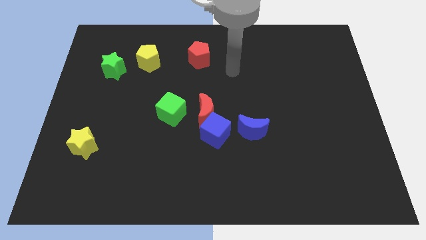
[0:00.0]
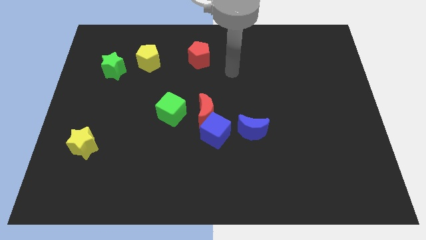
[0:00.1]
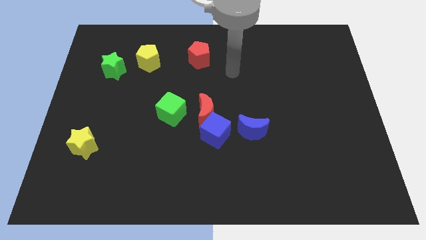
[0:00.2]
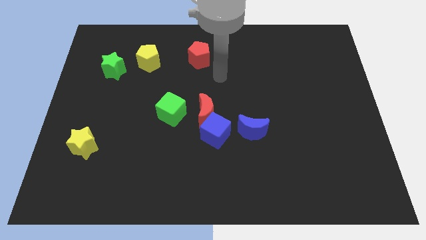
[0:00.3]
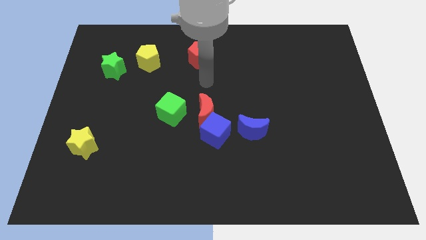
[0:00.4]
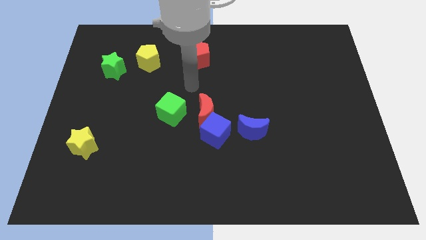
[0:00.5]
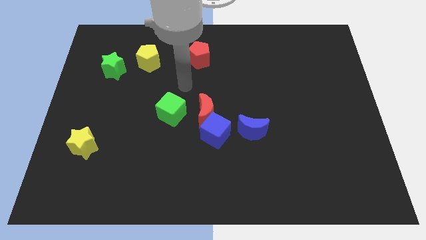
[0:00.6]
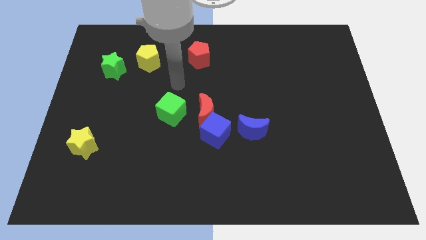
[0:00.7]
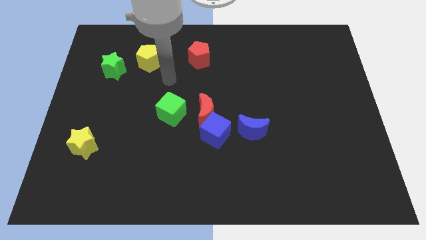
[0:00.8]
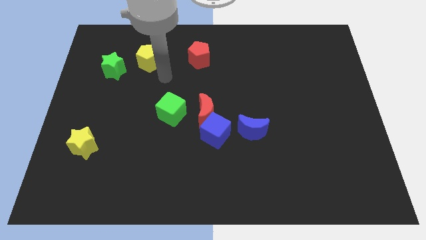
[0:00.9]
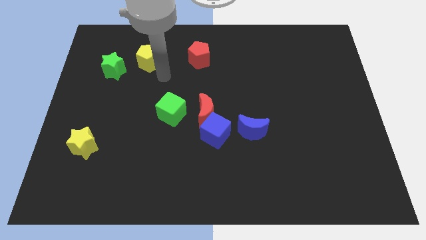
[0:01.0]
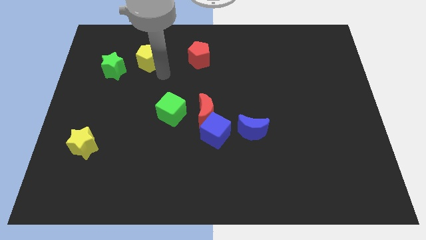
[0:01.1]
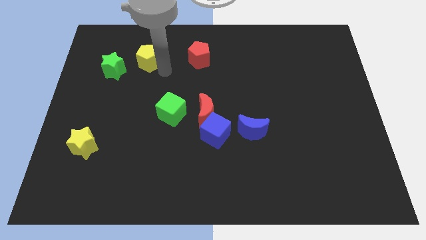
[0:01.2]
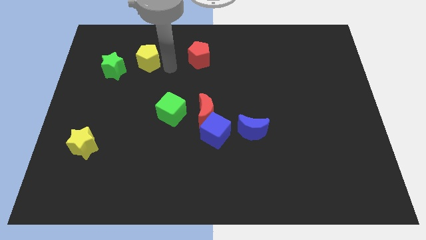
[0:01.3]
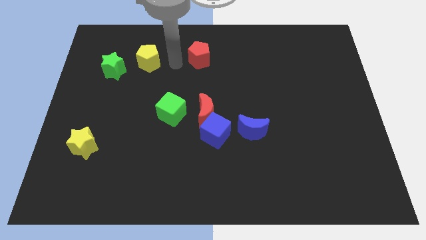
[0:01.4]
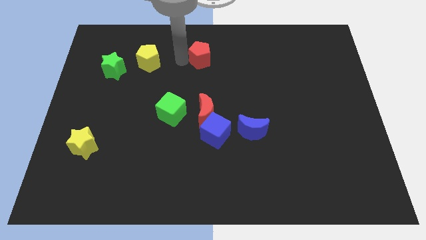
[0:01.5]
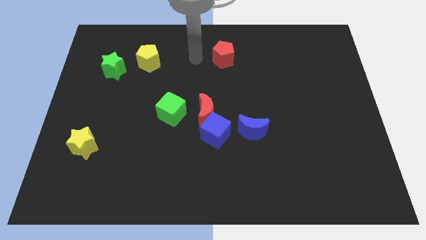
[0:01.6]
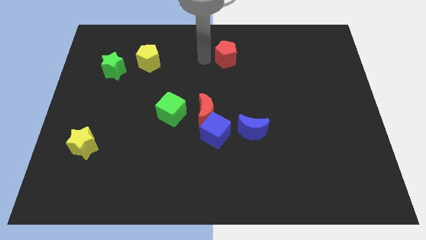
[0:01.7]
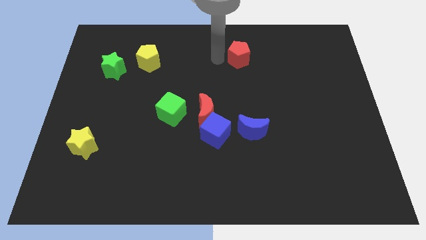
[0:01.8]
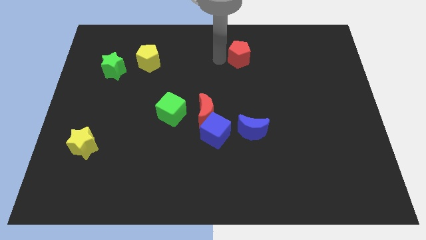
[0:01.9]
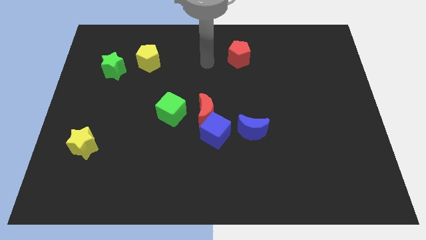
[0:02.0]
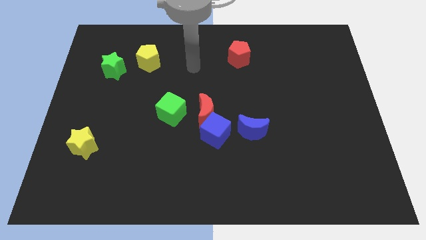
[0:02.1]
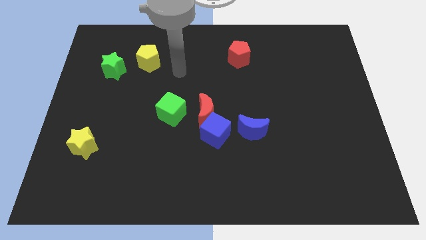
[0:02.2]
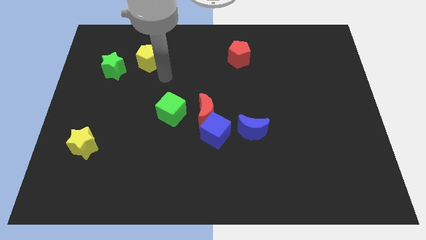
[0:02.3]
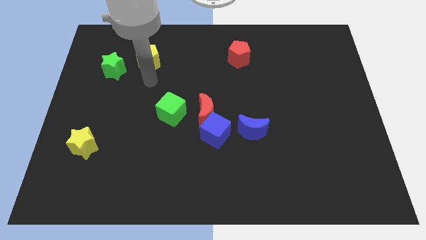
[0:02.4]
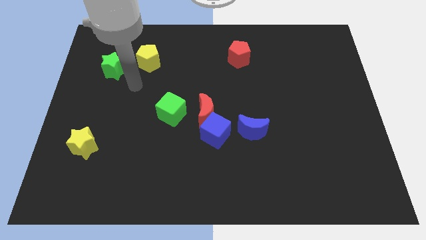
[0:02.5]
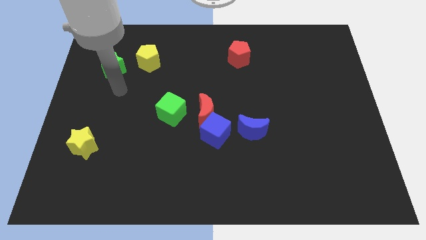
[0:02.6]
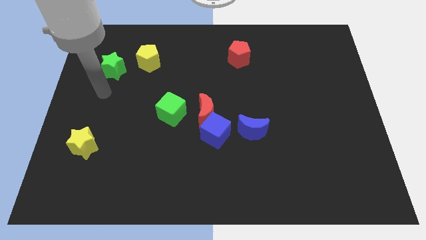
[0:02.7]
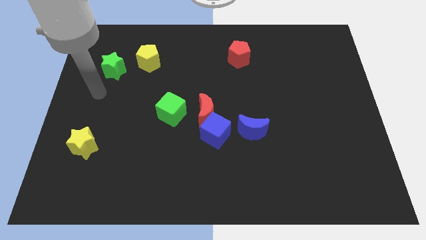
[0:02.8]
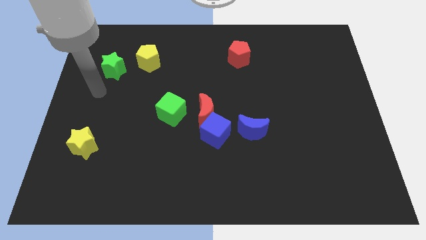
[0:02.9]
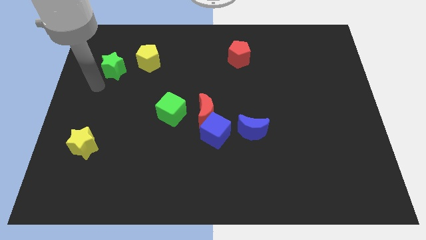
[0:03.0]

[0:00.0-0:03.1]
push the red pentagon to the right side slightly

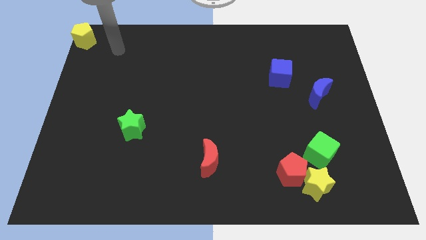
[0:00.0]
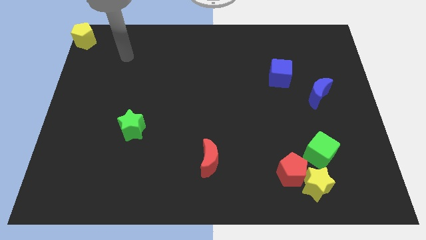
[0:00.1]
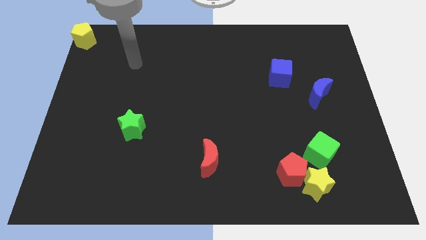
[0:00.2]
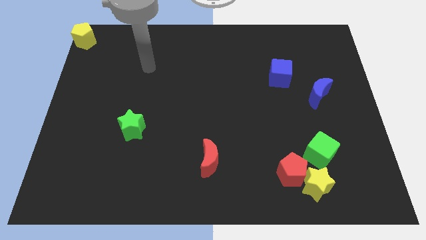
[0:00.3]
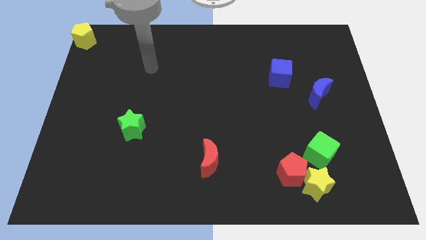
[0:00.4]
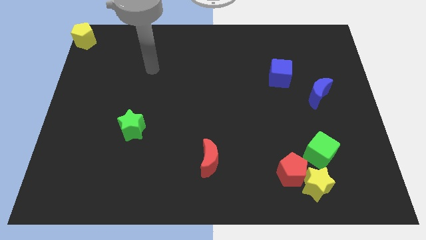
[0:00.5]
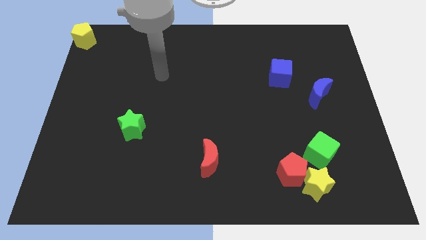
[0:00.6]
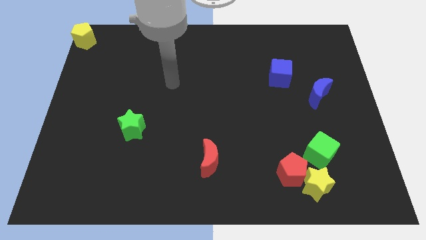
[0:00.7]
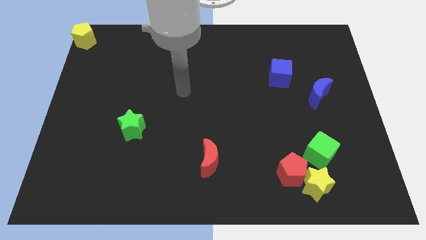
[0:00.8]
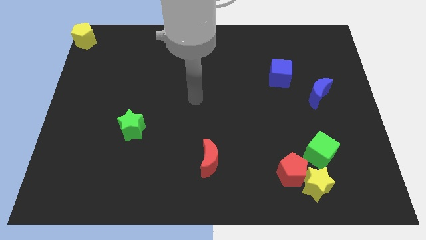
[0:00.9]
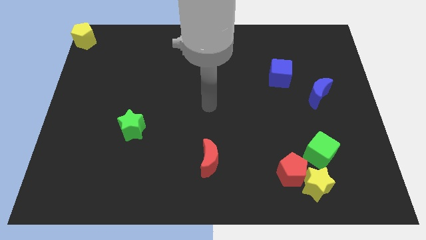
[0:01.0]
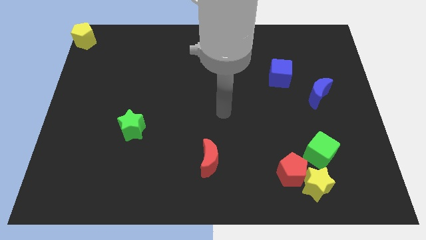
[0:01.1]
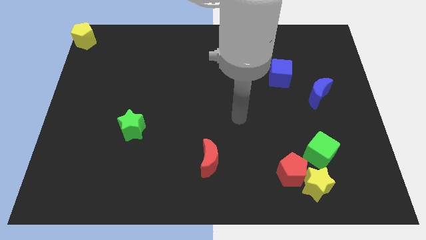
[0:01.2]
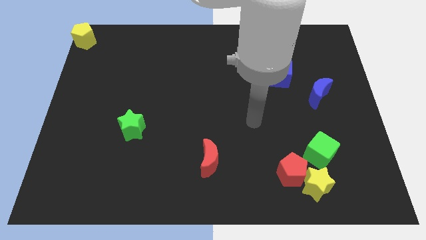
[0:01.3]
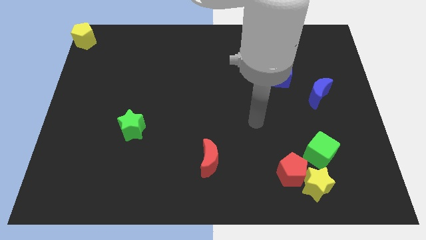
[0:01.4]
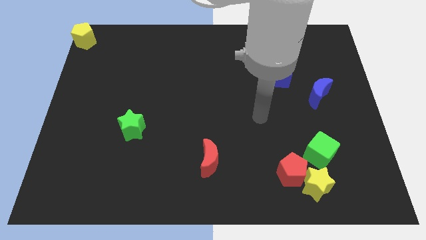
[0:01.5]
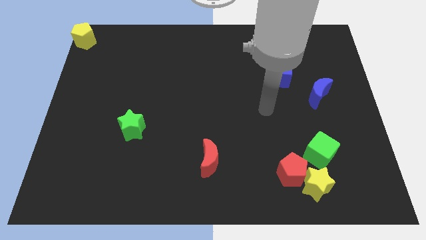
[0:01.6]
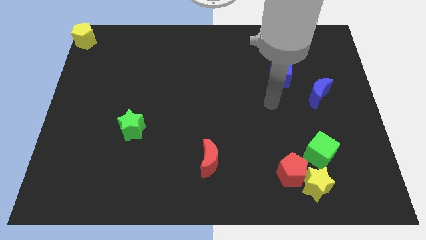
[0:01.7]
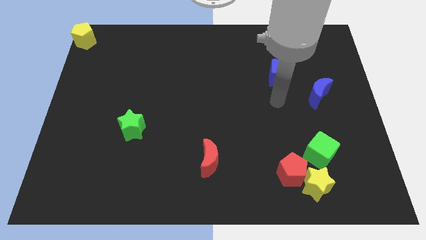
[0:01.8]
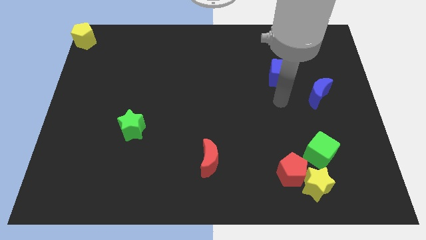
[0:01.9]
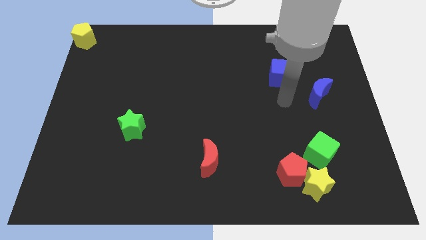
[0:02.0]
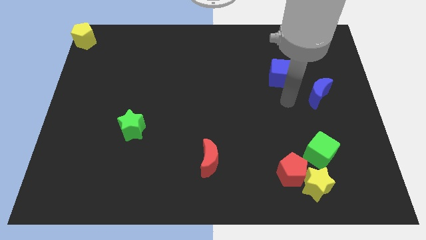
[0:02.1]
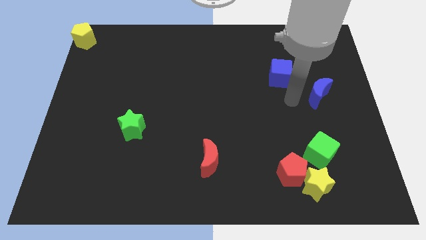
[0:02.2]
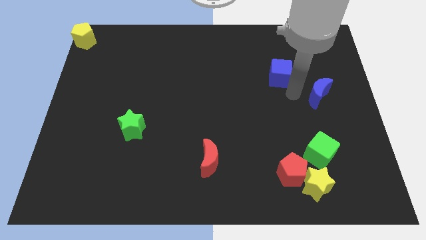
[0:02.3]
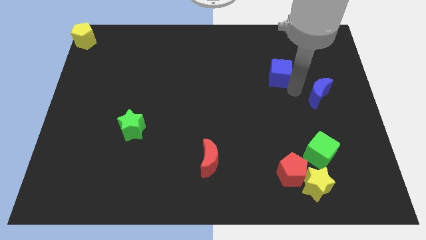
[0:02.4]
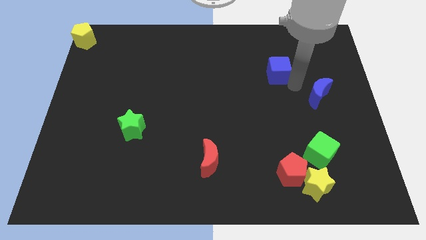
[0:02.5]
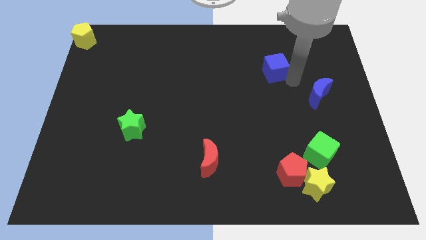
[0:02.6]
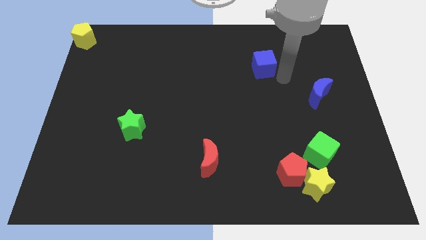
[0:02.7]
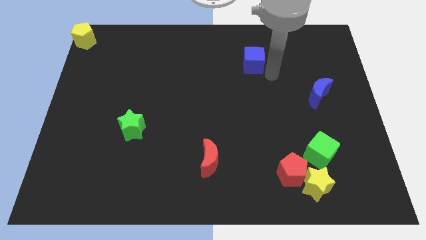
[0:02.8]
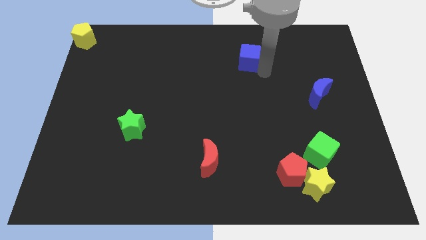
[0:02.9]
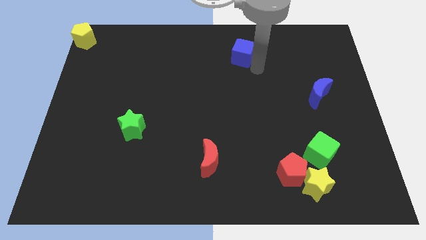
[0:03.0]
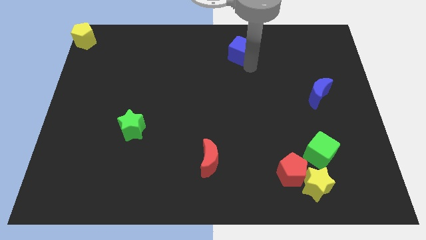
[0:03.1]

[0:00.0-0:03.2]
go and push the blue cube towards the top center of the board

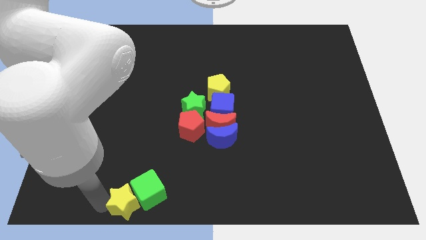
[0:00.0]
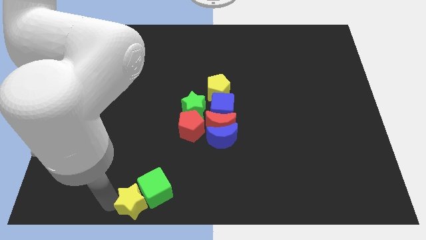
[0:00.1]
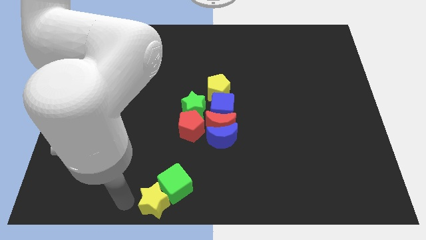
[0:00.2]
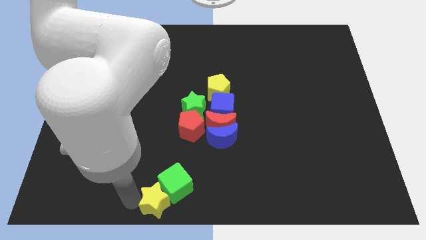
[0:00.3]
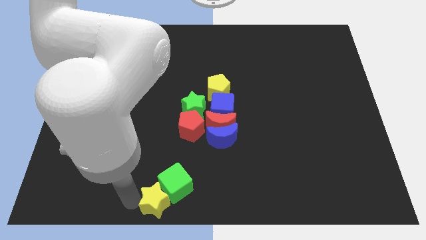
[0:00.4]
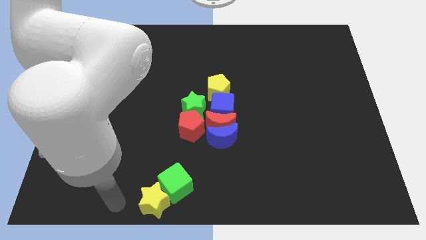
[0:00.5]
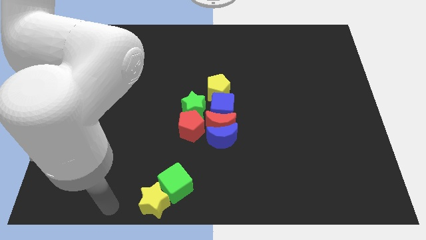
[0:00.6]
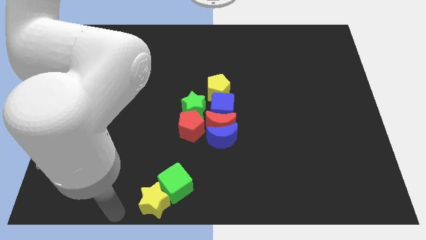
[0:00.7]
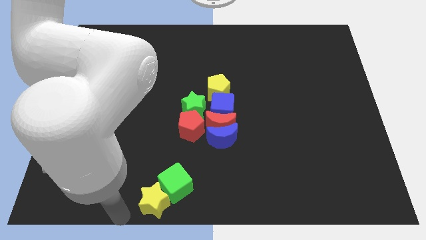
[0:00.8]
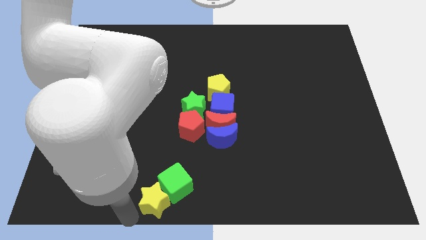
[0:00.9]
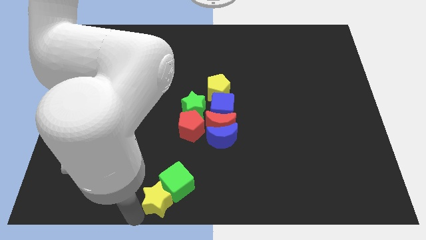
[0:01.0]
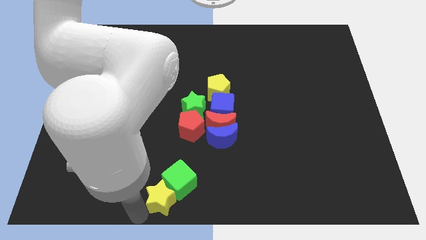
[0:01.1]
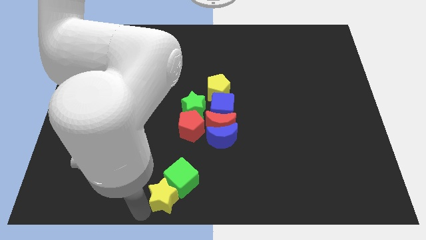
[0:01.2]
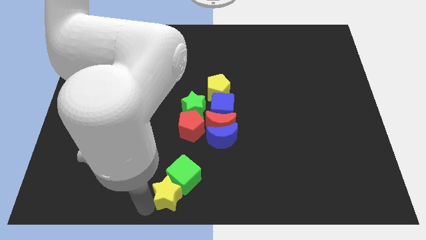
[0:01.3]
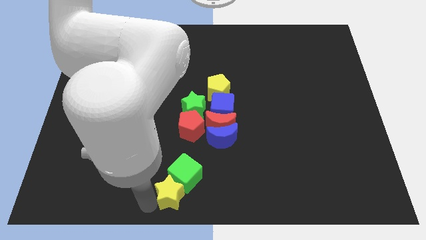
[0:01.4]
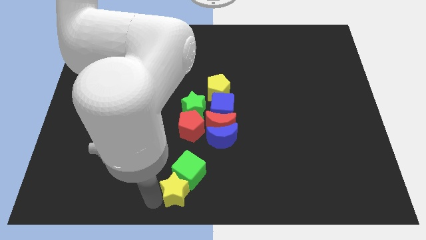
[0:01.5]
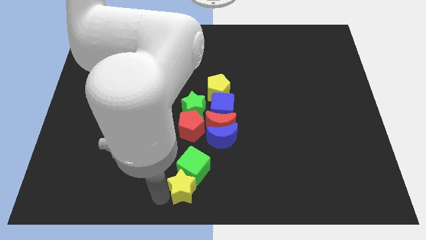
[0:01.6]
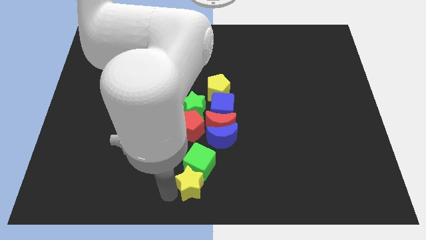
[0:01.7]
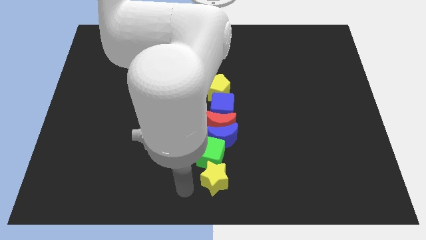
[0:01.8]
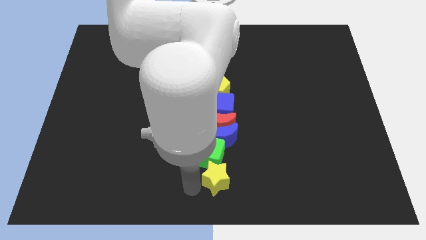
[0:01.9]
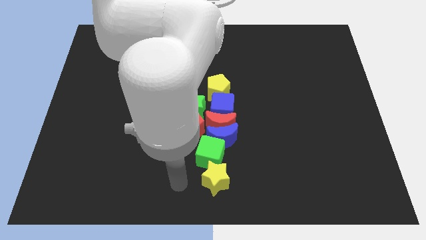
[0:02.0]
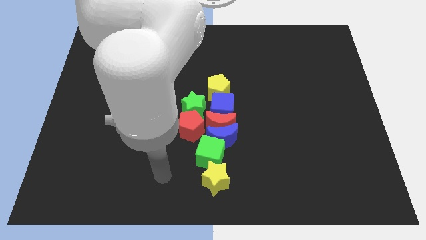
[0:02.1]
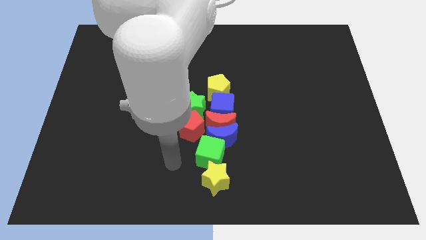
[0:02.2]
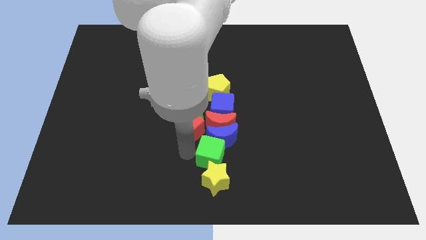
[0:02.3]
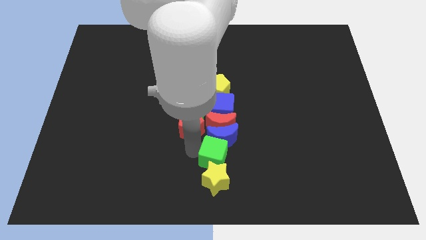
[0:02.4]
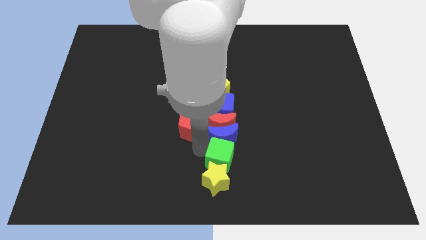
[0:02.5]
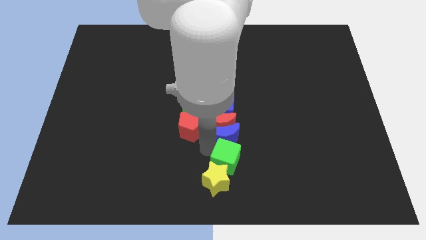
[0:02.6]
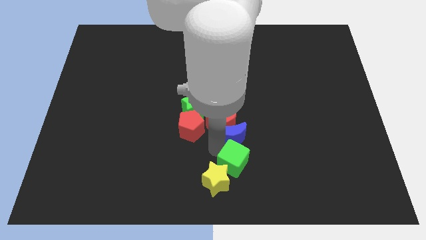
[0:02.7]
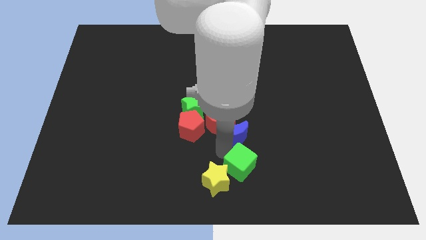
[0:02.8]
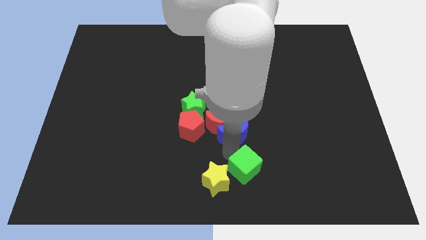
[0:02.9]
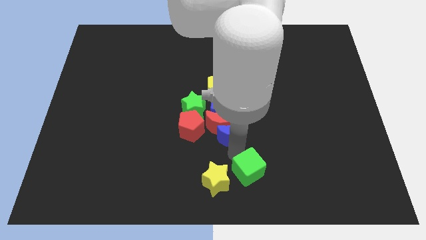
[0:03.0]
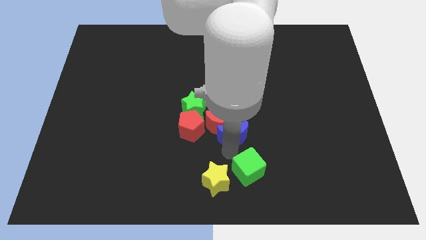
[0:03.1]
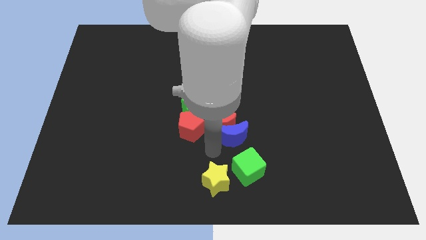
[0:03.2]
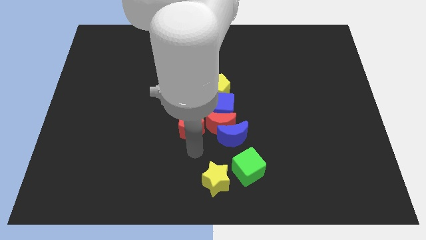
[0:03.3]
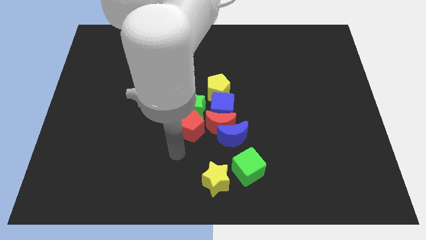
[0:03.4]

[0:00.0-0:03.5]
push the yellow star and green cube to the bottom center
